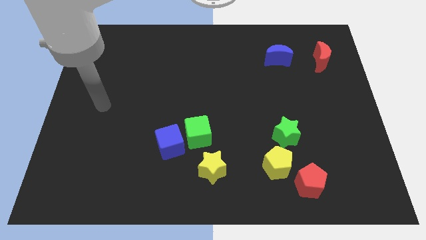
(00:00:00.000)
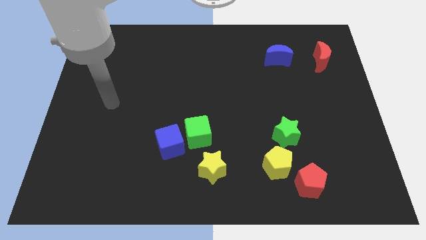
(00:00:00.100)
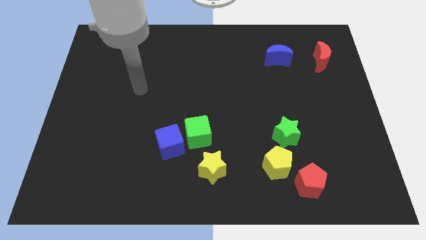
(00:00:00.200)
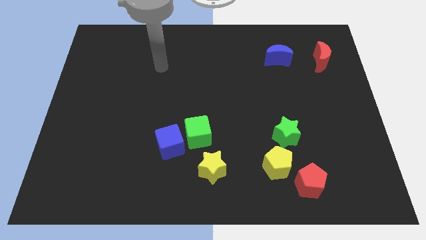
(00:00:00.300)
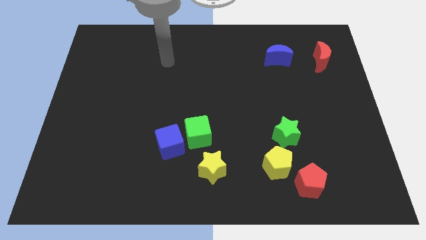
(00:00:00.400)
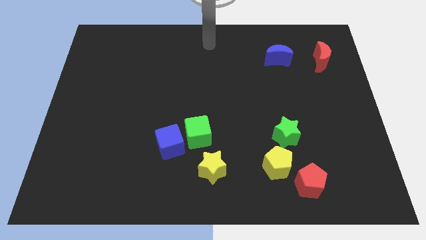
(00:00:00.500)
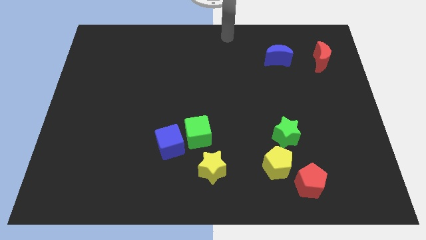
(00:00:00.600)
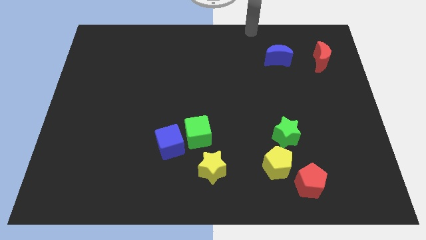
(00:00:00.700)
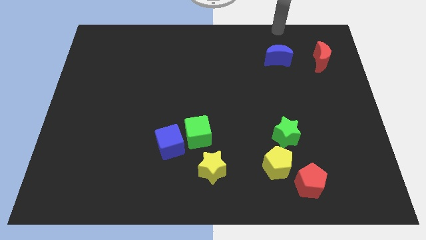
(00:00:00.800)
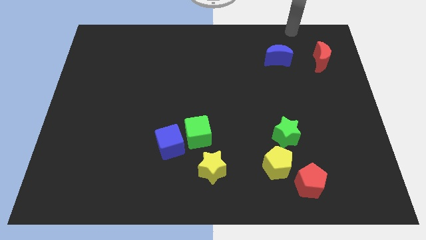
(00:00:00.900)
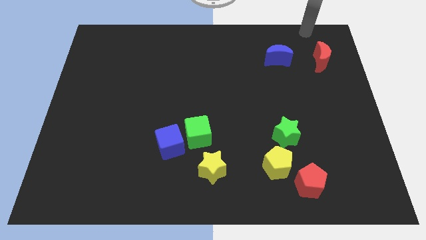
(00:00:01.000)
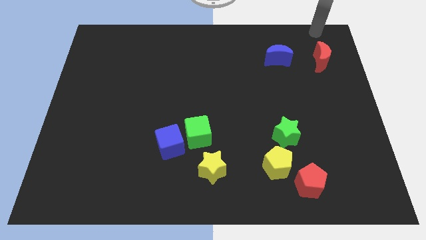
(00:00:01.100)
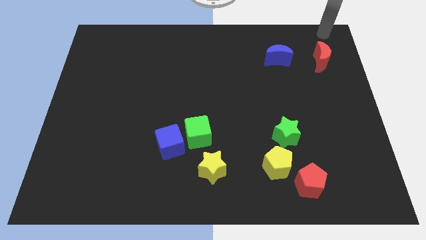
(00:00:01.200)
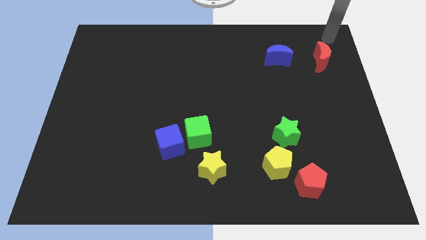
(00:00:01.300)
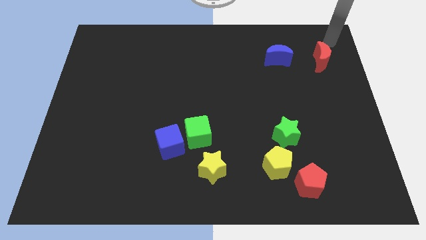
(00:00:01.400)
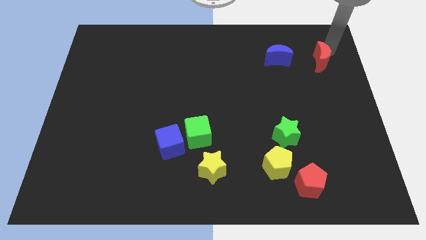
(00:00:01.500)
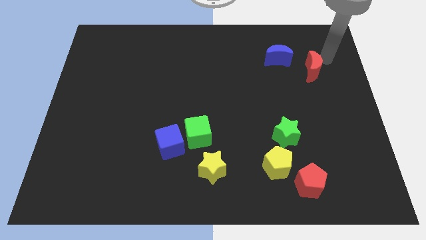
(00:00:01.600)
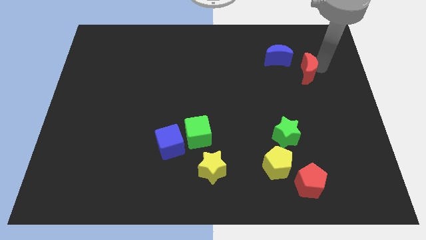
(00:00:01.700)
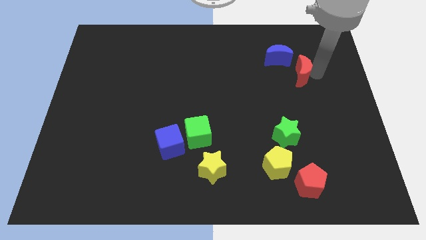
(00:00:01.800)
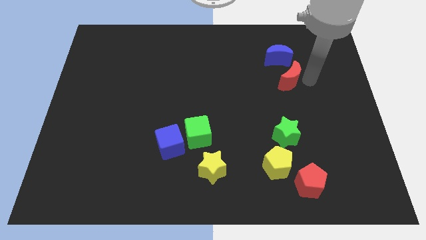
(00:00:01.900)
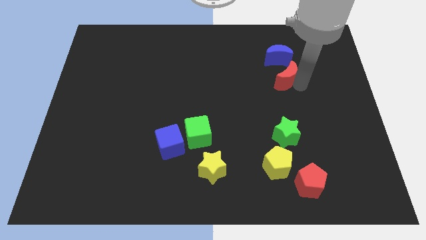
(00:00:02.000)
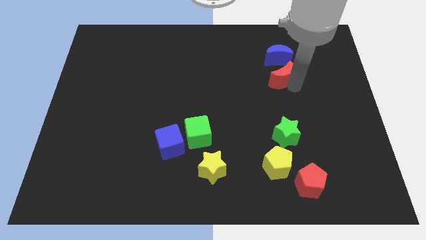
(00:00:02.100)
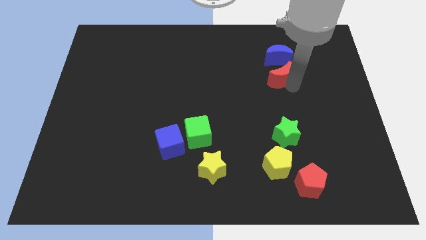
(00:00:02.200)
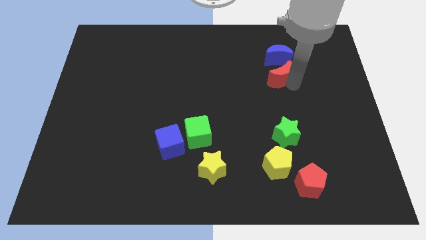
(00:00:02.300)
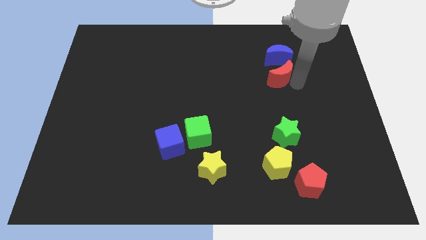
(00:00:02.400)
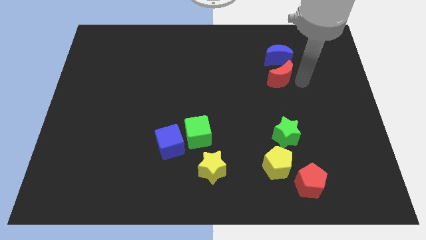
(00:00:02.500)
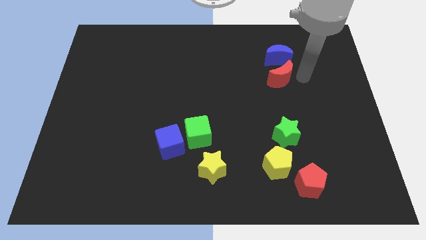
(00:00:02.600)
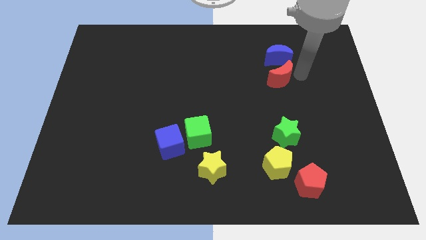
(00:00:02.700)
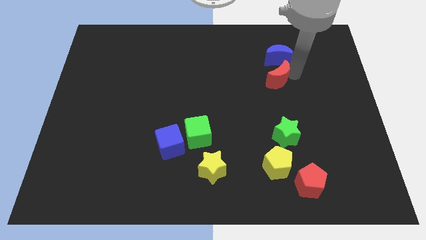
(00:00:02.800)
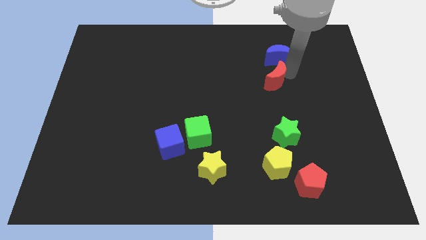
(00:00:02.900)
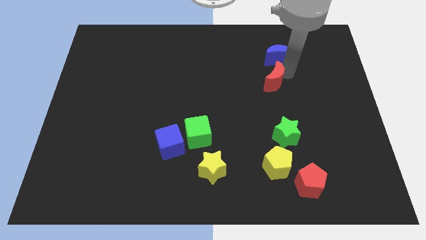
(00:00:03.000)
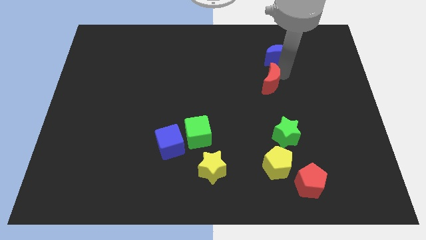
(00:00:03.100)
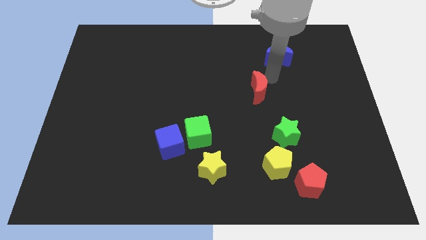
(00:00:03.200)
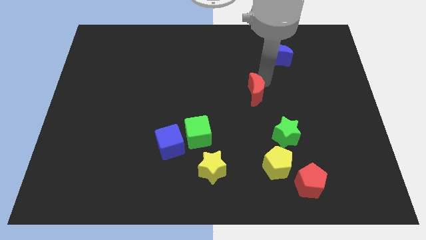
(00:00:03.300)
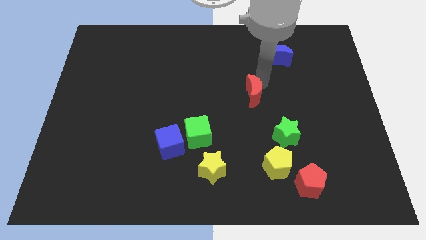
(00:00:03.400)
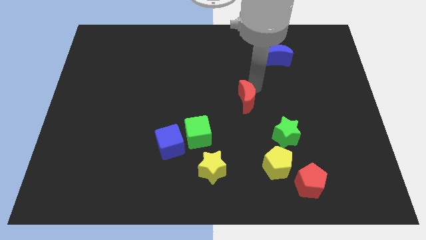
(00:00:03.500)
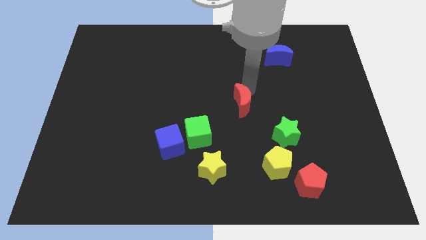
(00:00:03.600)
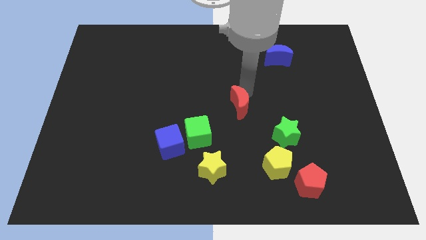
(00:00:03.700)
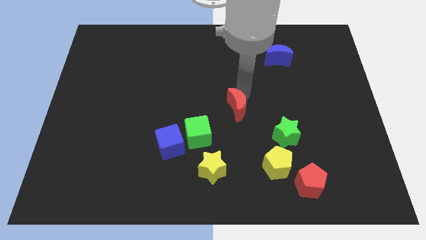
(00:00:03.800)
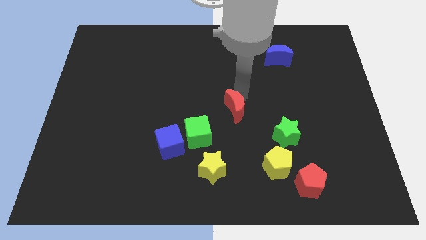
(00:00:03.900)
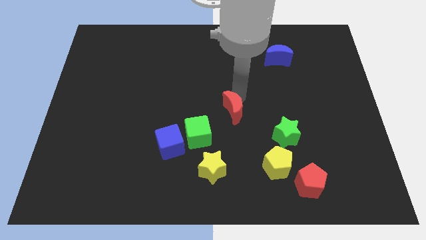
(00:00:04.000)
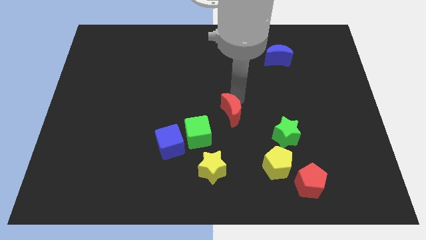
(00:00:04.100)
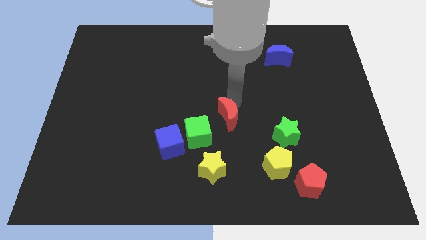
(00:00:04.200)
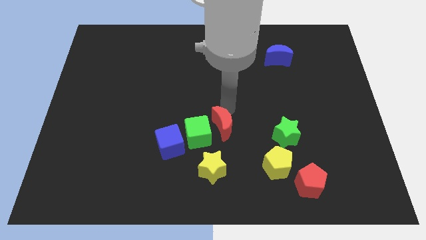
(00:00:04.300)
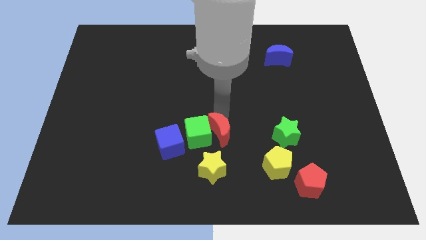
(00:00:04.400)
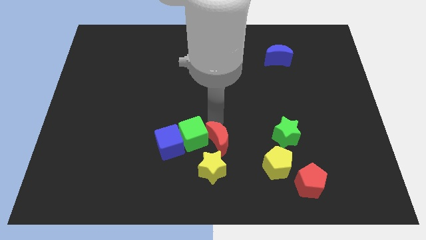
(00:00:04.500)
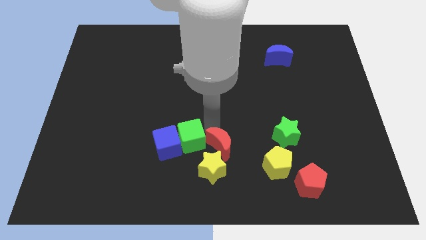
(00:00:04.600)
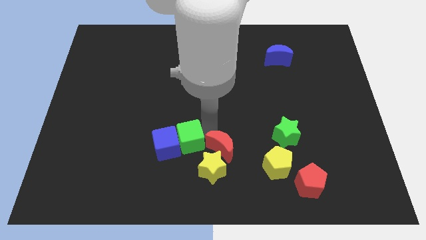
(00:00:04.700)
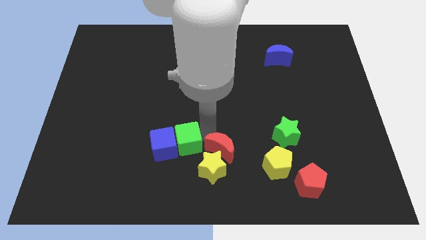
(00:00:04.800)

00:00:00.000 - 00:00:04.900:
slide the red moon close to the yellow star

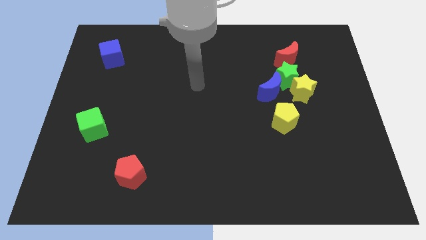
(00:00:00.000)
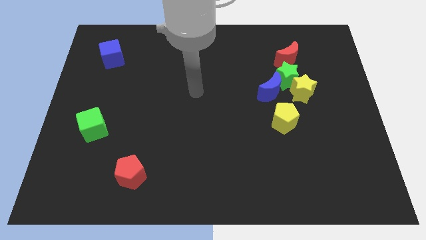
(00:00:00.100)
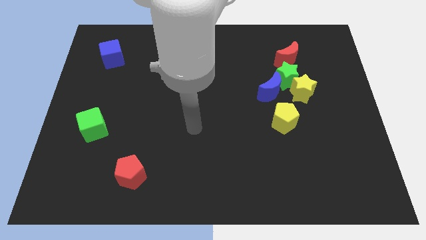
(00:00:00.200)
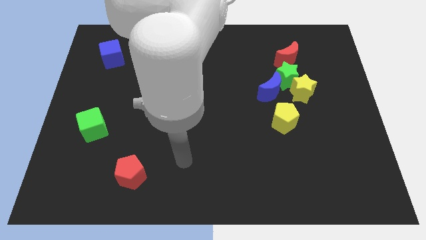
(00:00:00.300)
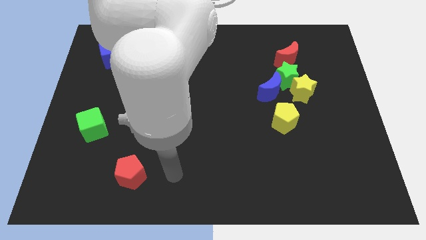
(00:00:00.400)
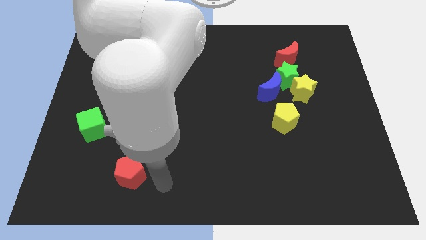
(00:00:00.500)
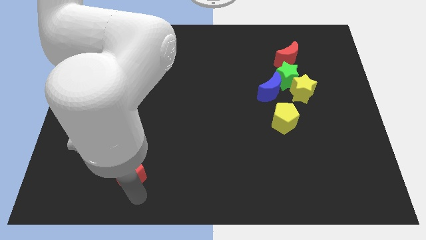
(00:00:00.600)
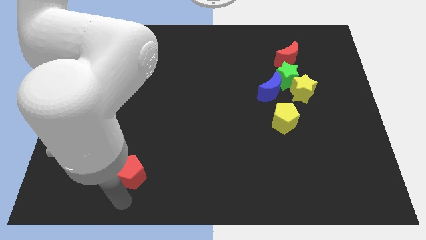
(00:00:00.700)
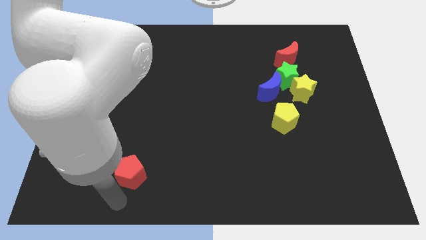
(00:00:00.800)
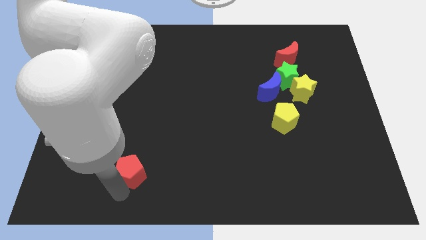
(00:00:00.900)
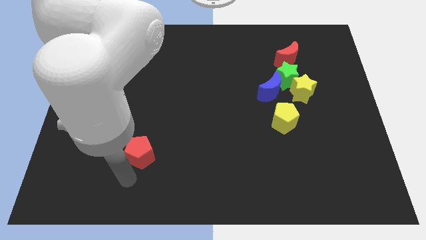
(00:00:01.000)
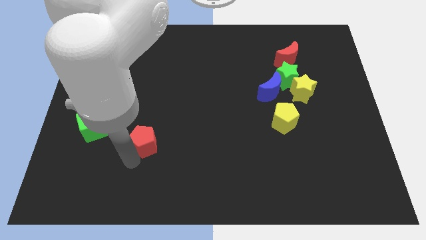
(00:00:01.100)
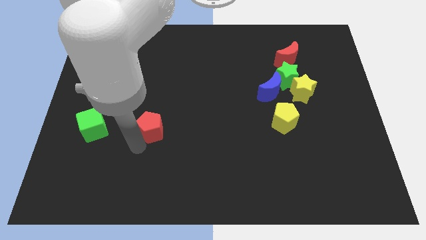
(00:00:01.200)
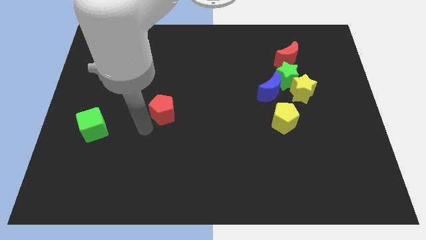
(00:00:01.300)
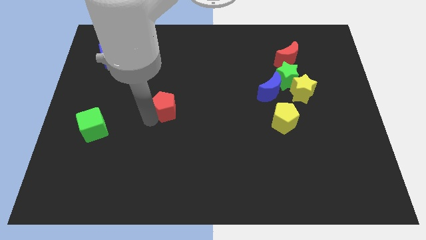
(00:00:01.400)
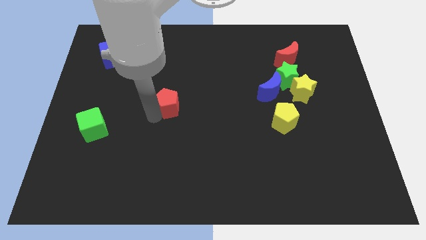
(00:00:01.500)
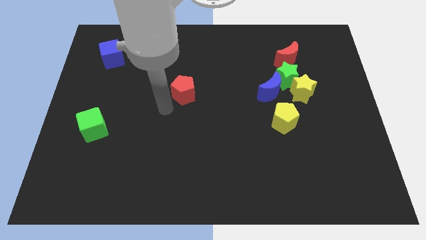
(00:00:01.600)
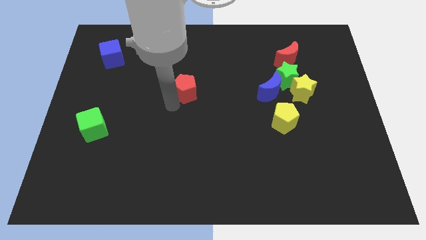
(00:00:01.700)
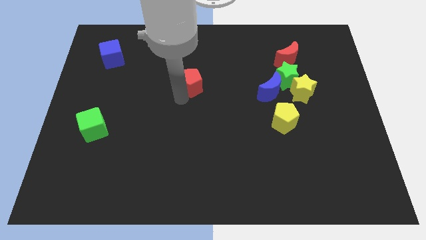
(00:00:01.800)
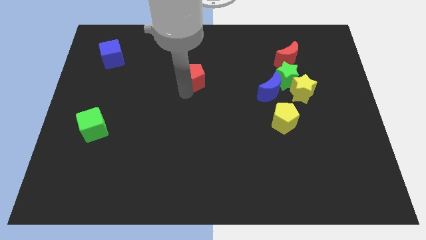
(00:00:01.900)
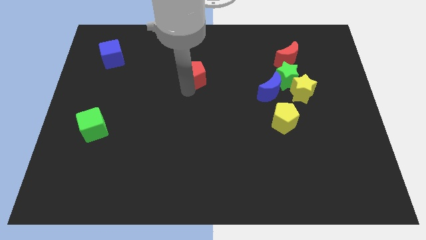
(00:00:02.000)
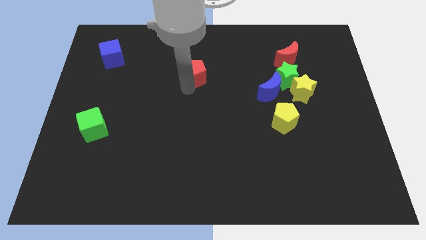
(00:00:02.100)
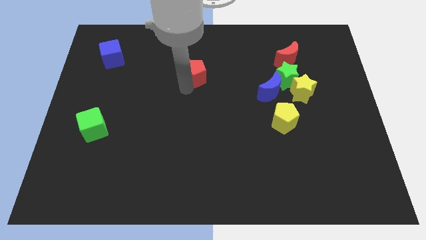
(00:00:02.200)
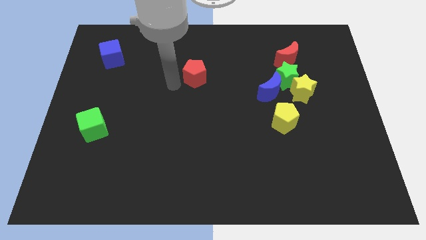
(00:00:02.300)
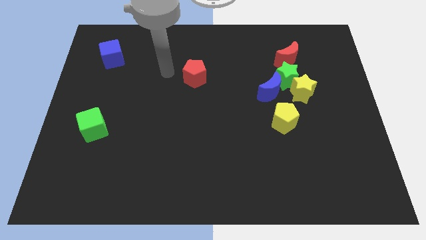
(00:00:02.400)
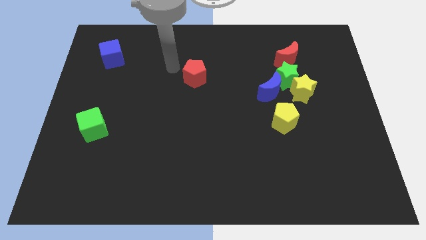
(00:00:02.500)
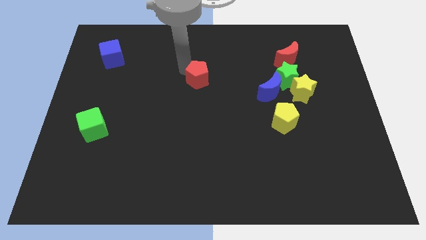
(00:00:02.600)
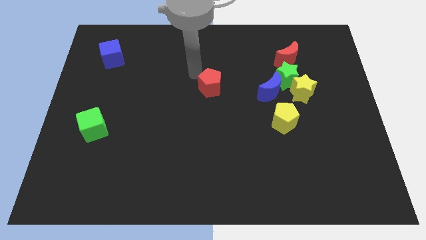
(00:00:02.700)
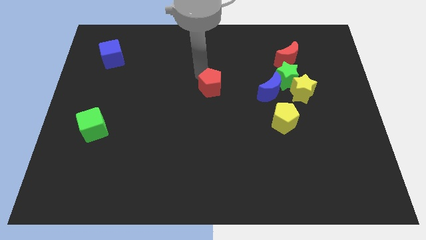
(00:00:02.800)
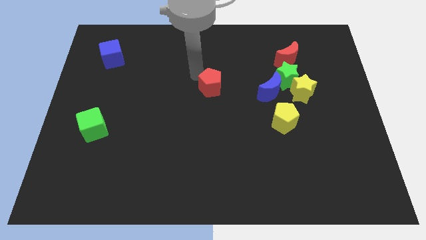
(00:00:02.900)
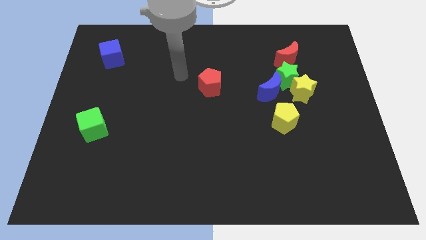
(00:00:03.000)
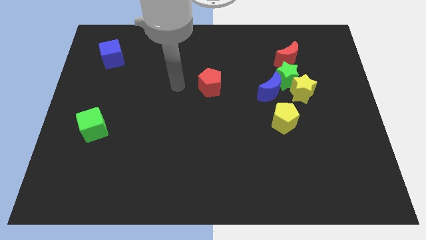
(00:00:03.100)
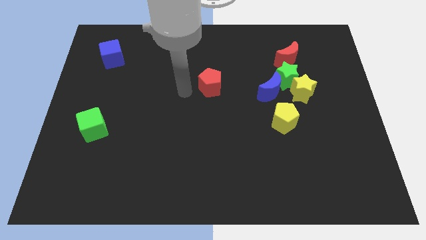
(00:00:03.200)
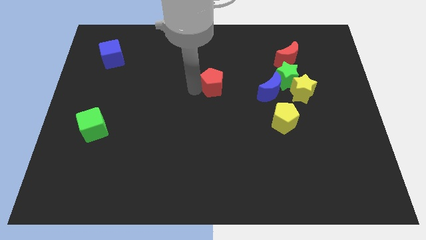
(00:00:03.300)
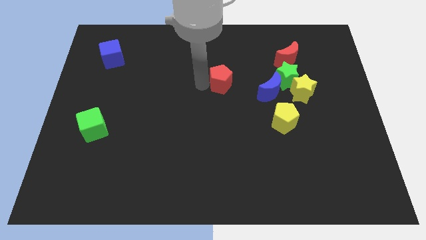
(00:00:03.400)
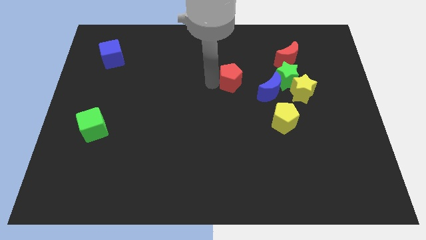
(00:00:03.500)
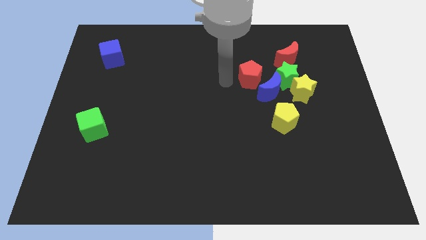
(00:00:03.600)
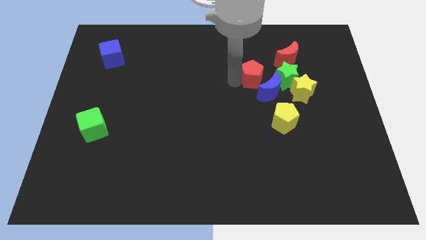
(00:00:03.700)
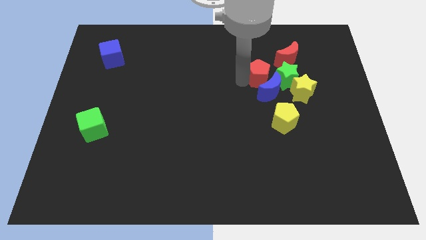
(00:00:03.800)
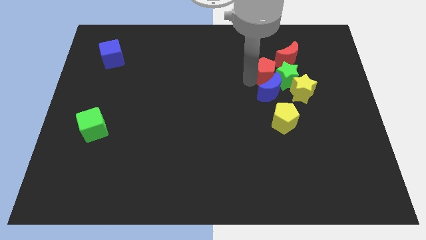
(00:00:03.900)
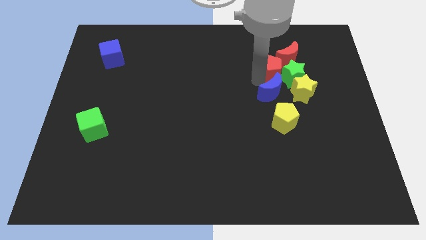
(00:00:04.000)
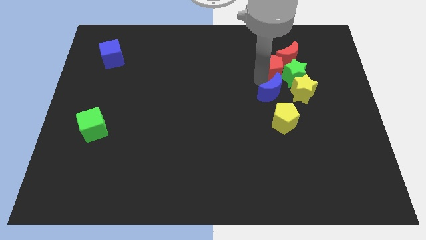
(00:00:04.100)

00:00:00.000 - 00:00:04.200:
slide the red pentagon to the green star
